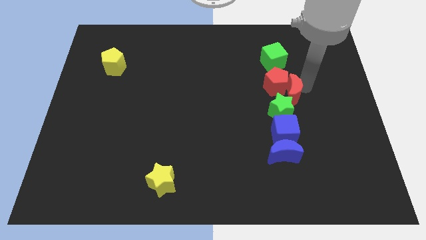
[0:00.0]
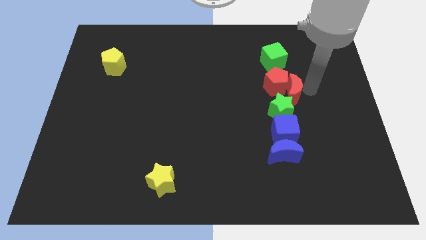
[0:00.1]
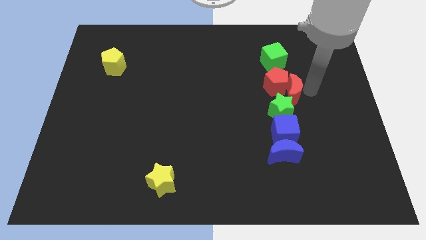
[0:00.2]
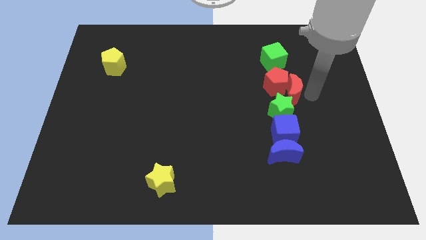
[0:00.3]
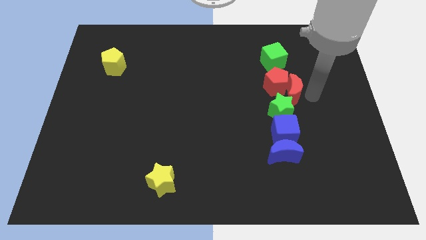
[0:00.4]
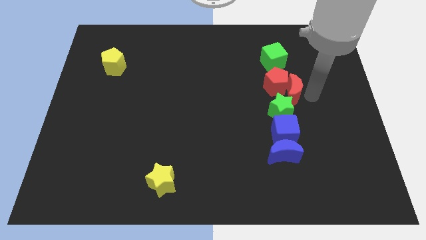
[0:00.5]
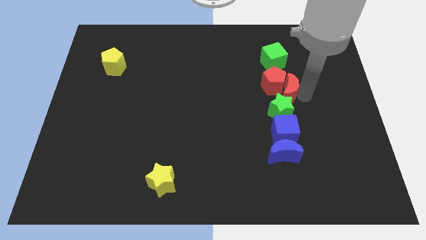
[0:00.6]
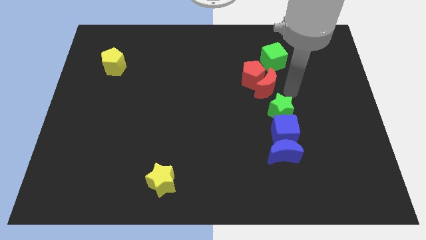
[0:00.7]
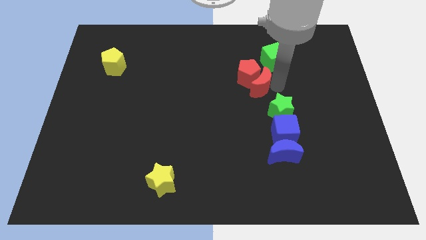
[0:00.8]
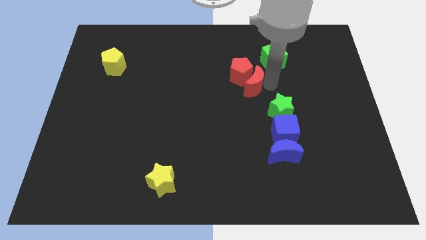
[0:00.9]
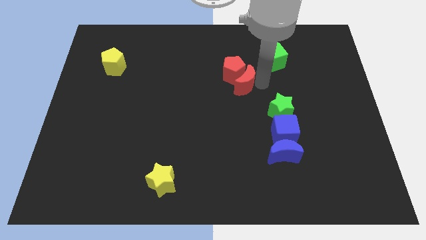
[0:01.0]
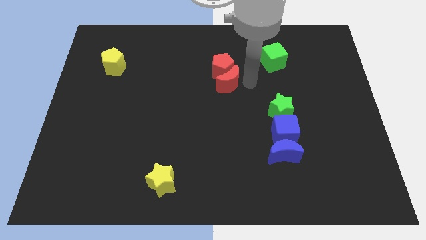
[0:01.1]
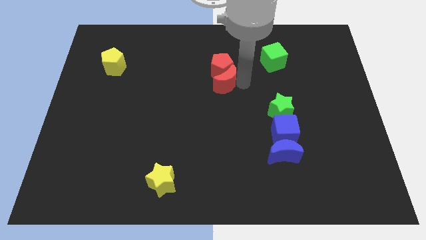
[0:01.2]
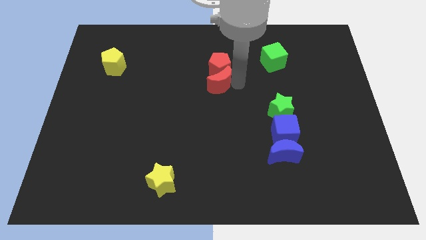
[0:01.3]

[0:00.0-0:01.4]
move the red moonred pentagon to the center

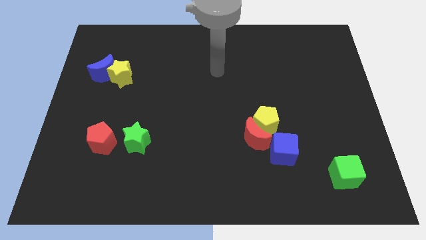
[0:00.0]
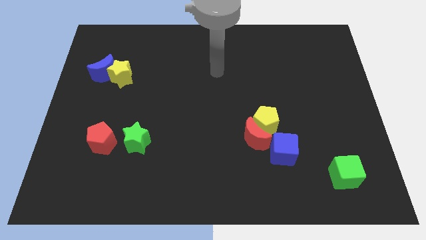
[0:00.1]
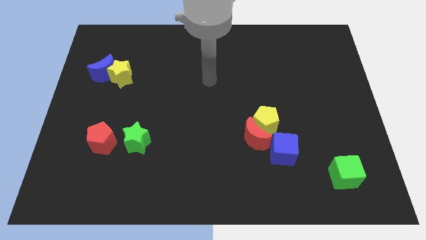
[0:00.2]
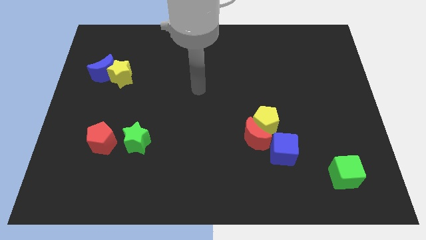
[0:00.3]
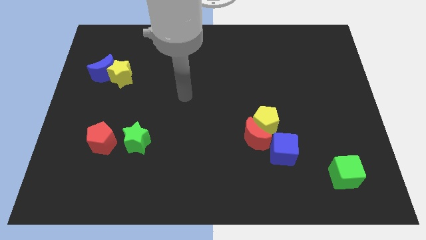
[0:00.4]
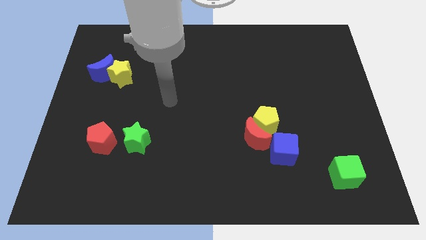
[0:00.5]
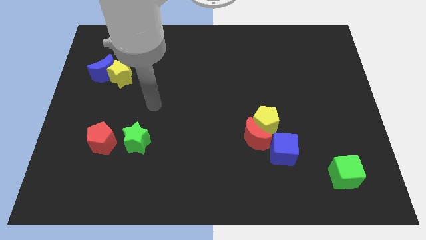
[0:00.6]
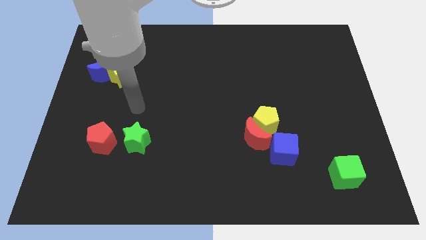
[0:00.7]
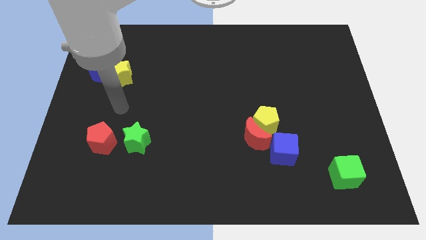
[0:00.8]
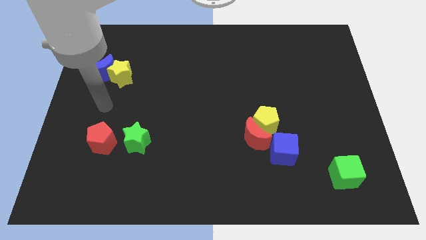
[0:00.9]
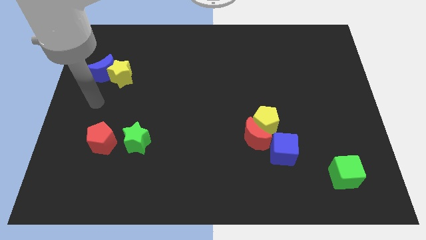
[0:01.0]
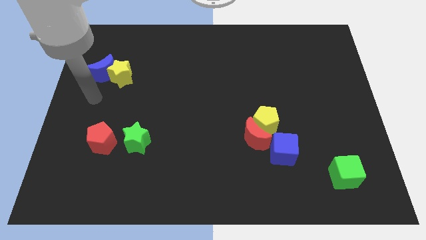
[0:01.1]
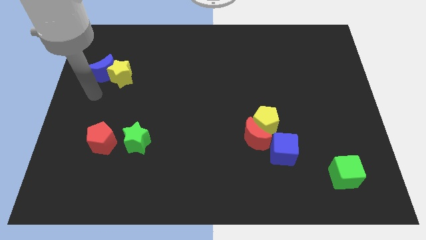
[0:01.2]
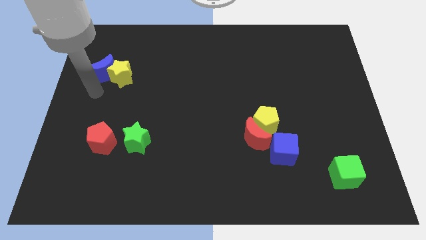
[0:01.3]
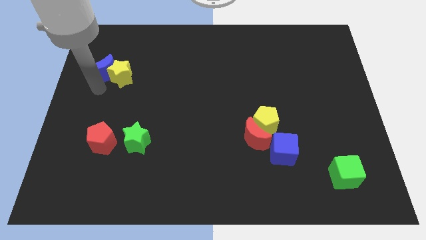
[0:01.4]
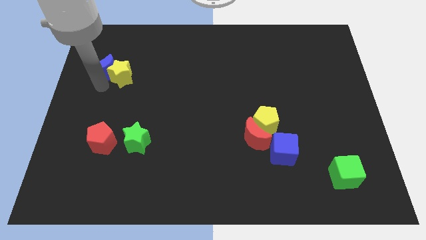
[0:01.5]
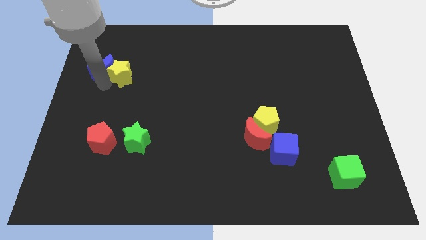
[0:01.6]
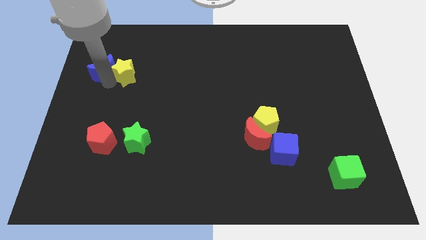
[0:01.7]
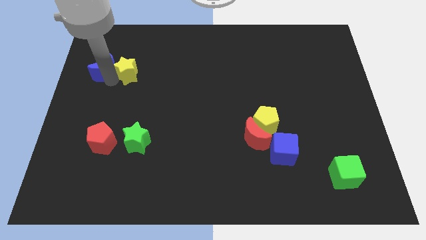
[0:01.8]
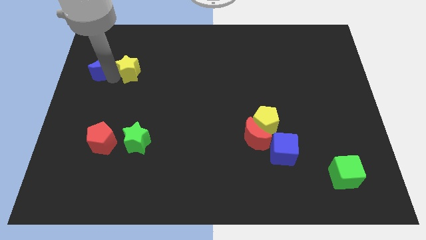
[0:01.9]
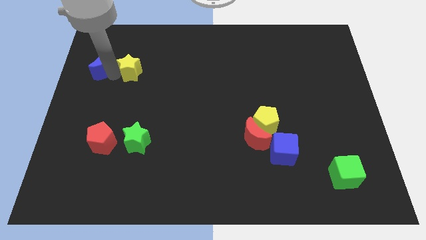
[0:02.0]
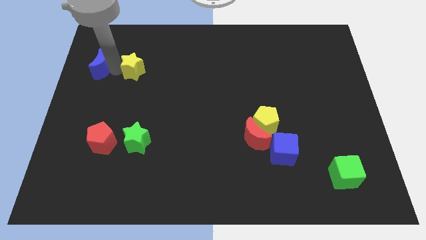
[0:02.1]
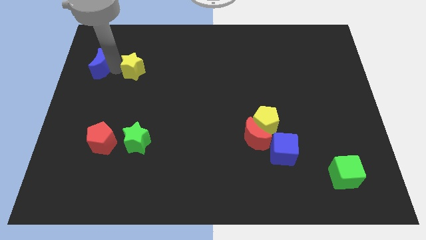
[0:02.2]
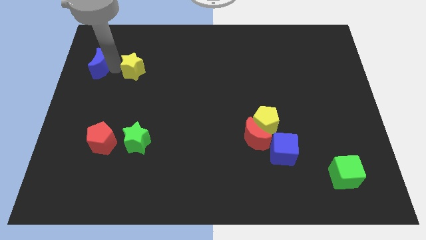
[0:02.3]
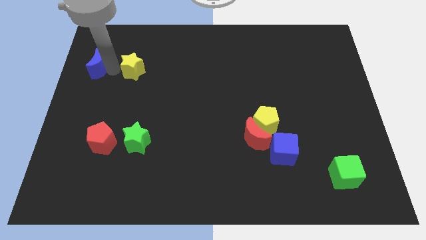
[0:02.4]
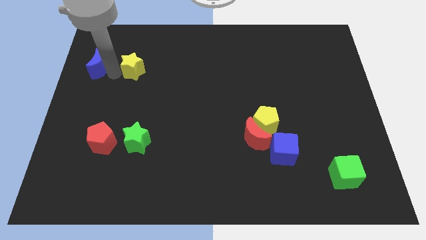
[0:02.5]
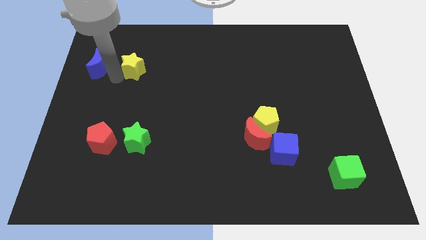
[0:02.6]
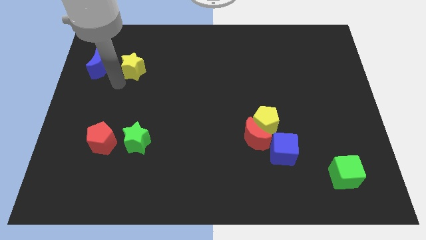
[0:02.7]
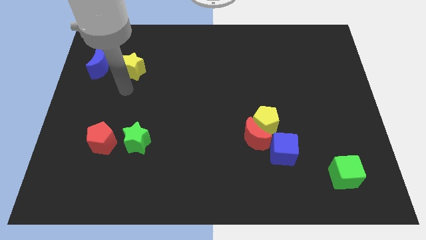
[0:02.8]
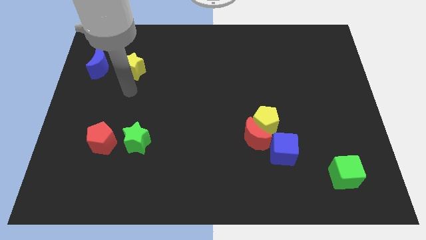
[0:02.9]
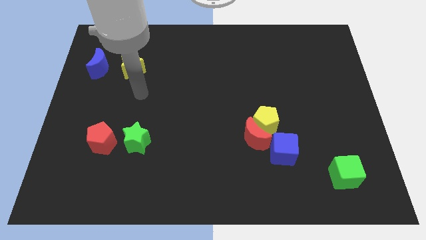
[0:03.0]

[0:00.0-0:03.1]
separate yellow star from blue crescent

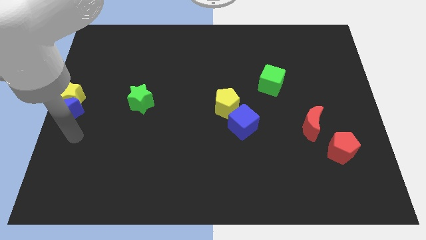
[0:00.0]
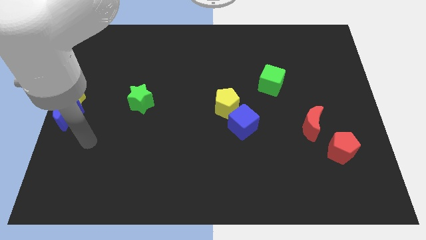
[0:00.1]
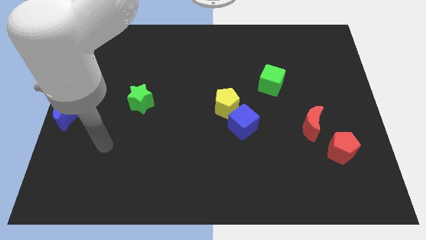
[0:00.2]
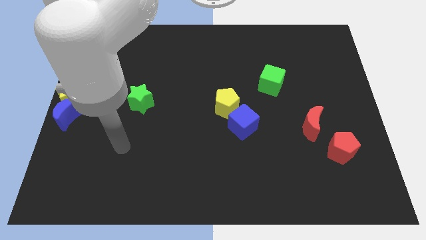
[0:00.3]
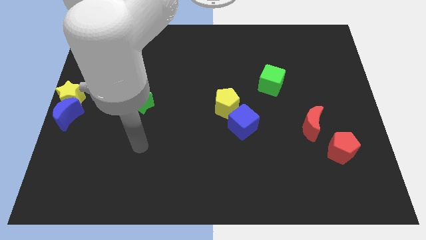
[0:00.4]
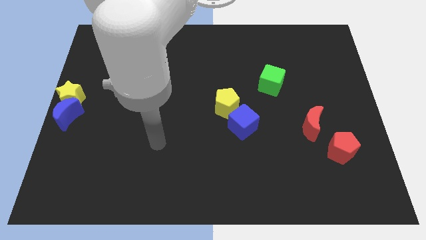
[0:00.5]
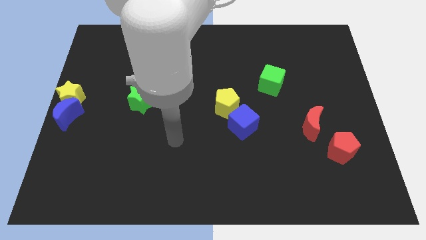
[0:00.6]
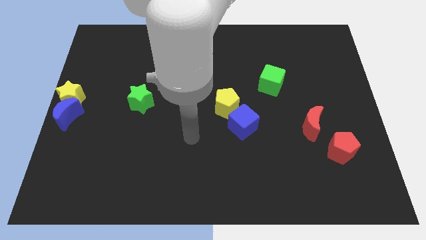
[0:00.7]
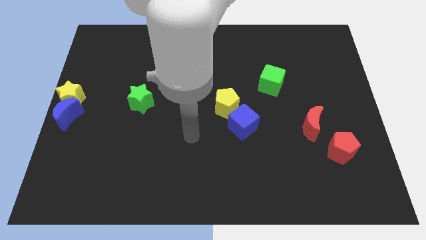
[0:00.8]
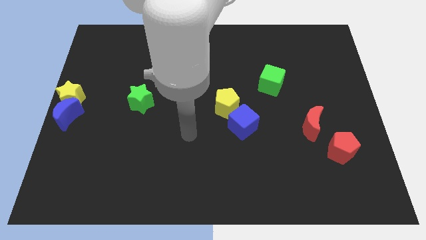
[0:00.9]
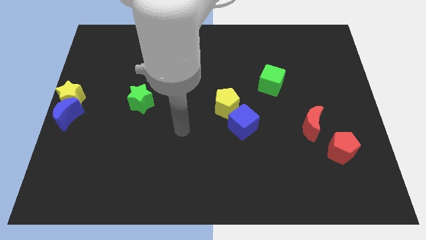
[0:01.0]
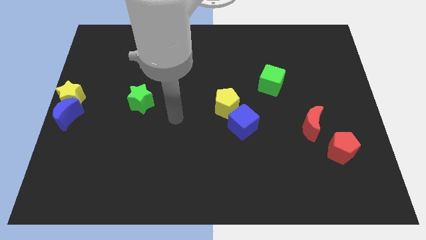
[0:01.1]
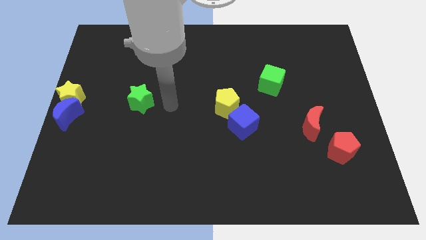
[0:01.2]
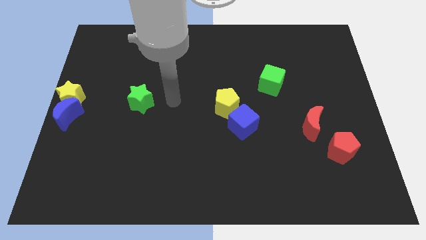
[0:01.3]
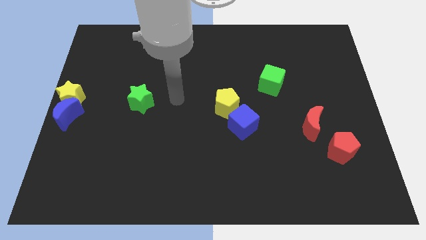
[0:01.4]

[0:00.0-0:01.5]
put your hand between the green star and yellow pentagon

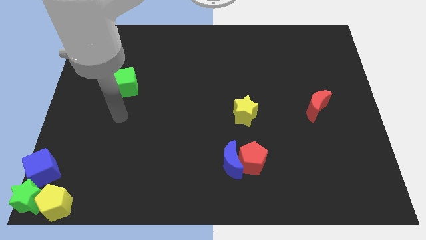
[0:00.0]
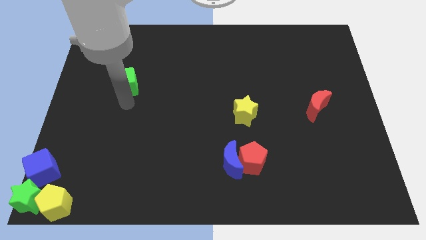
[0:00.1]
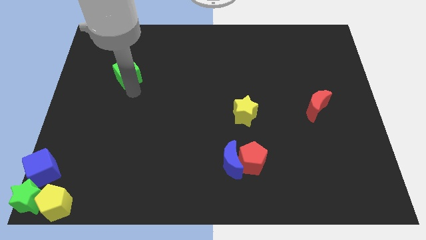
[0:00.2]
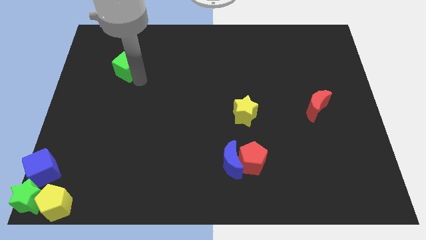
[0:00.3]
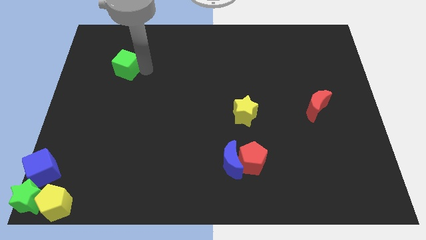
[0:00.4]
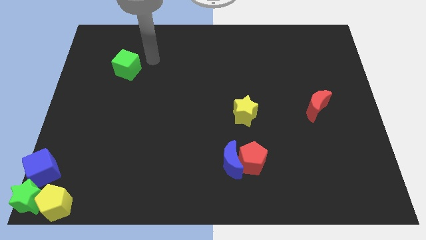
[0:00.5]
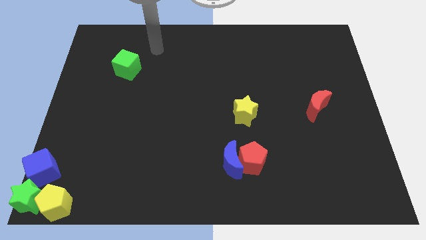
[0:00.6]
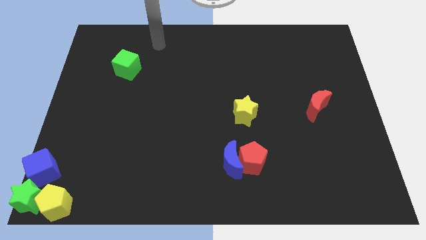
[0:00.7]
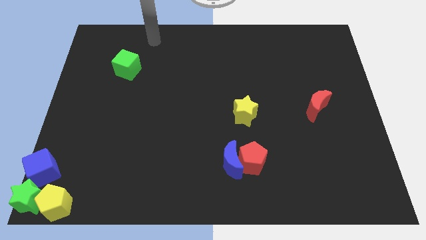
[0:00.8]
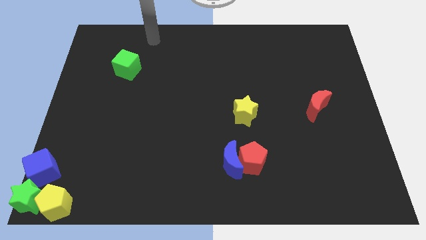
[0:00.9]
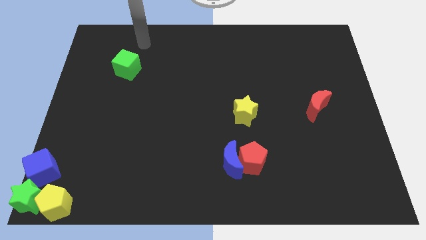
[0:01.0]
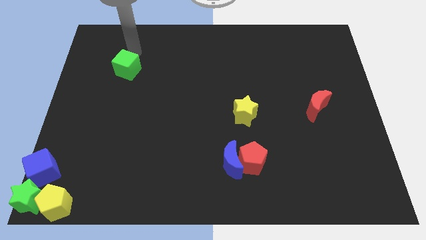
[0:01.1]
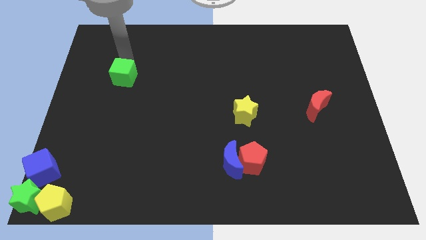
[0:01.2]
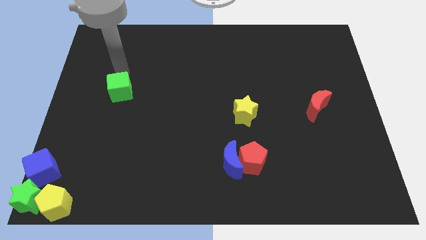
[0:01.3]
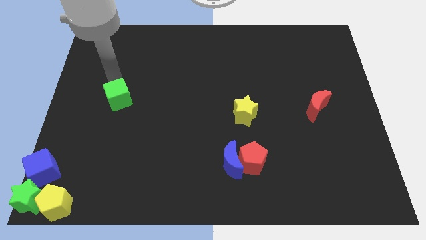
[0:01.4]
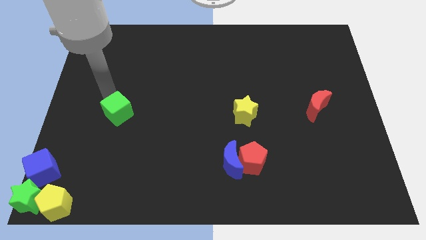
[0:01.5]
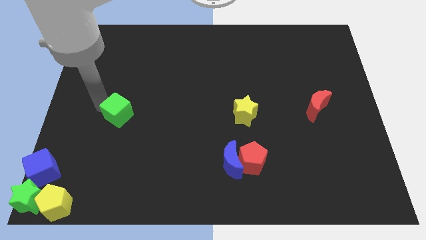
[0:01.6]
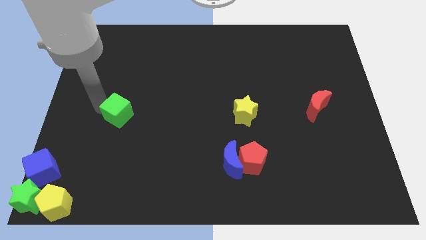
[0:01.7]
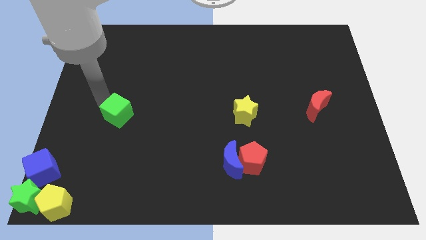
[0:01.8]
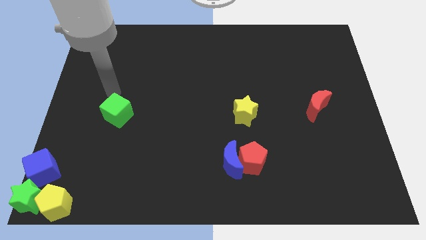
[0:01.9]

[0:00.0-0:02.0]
push the green cube slightly towards the bottom left side of the board

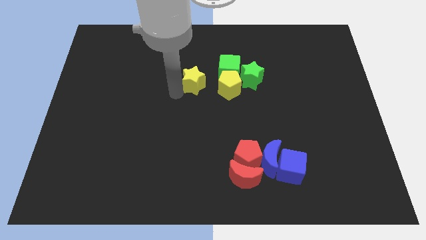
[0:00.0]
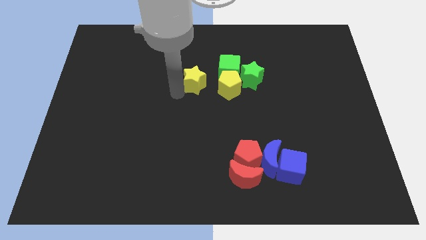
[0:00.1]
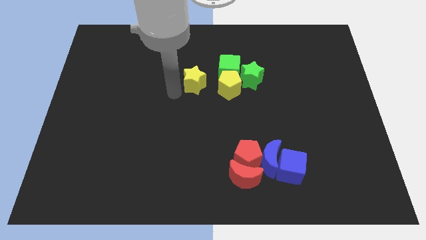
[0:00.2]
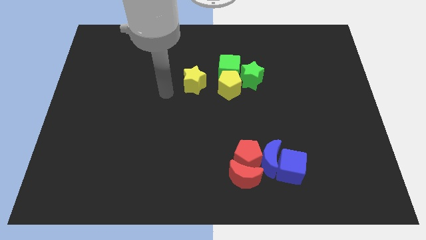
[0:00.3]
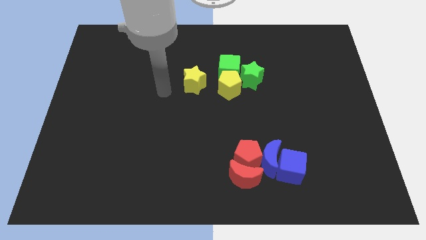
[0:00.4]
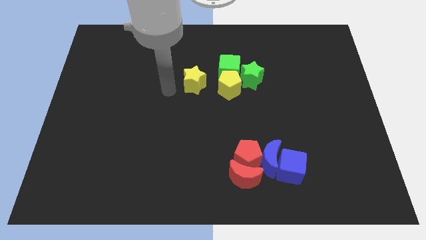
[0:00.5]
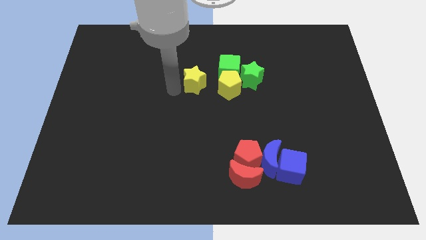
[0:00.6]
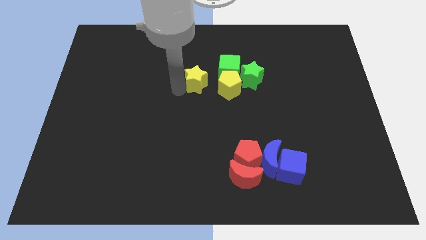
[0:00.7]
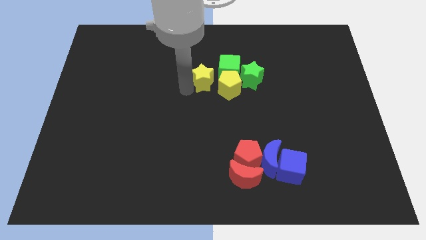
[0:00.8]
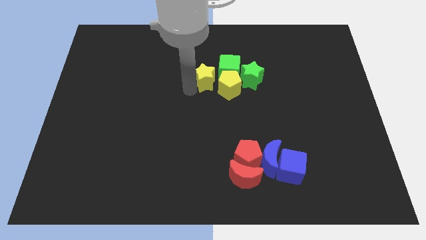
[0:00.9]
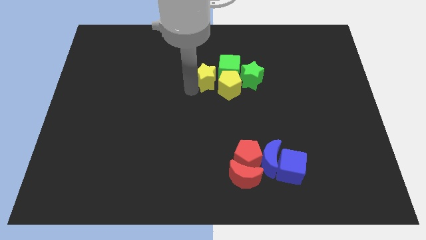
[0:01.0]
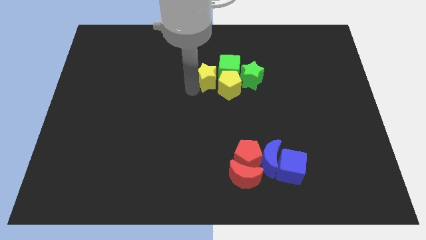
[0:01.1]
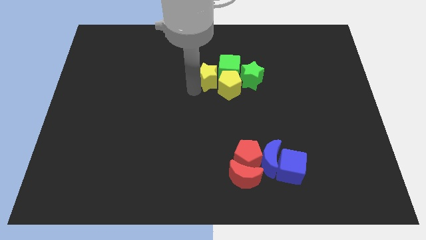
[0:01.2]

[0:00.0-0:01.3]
move the yellow star slightly to the right
